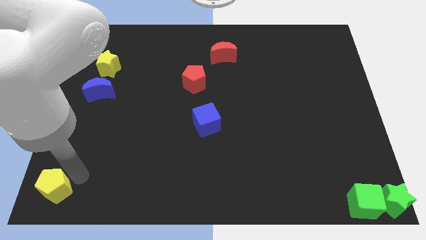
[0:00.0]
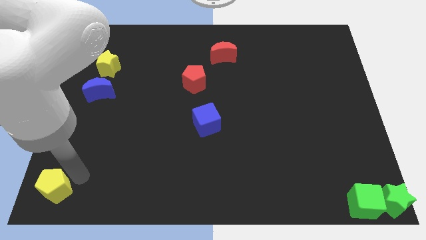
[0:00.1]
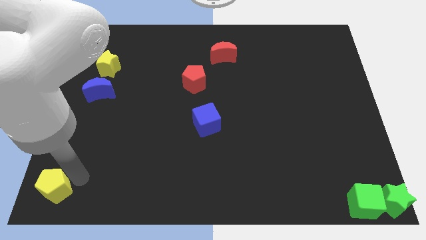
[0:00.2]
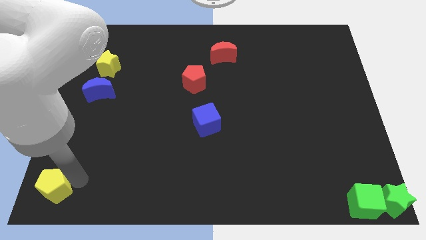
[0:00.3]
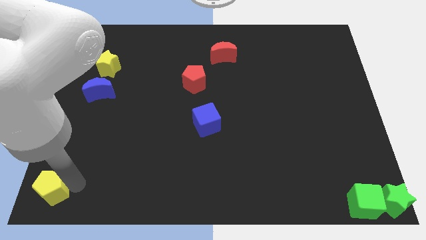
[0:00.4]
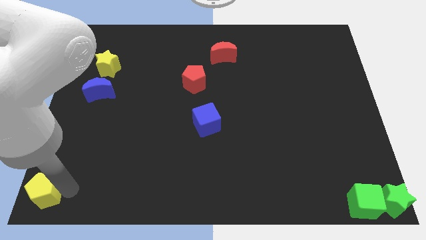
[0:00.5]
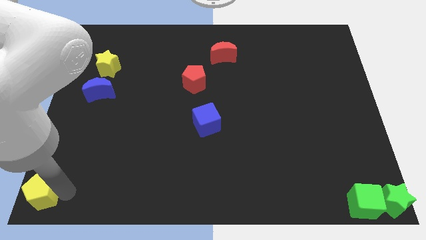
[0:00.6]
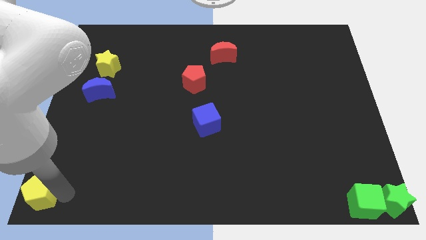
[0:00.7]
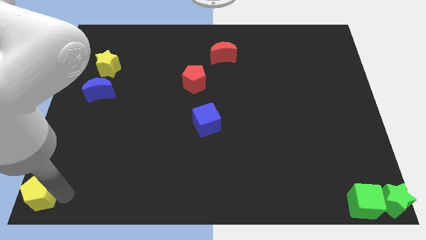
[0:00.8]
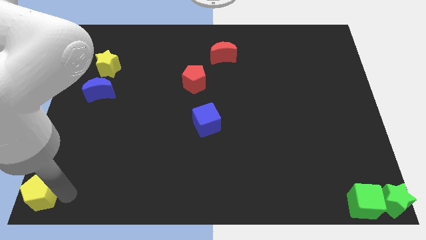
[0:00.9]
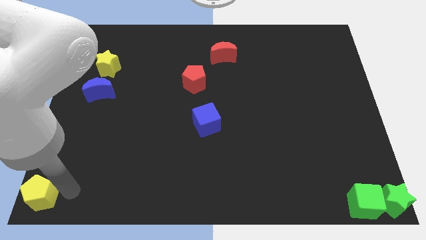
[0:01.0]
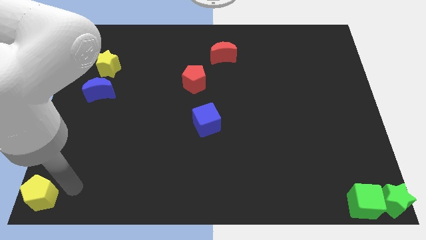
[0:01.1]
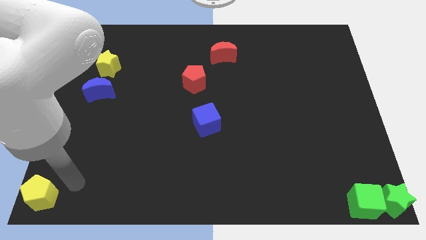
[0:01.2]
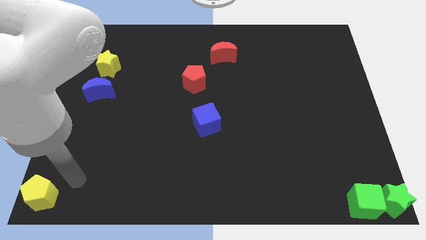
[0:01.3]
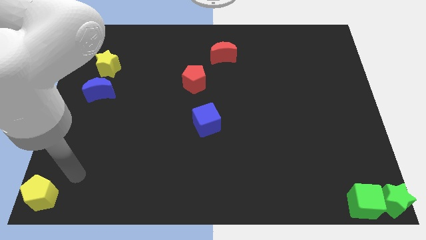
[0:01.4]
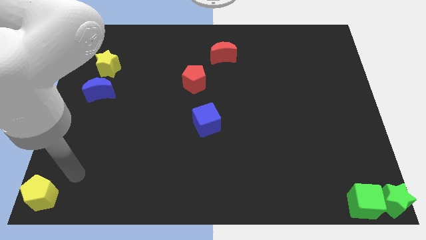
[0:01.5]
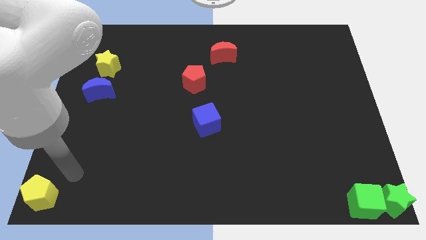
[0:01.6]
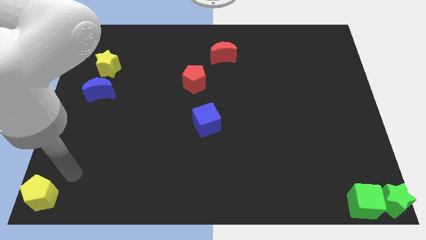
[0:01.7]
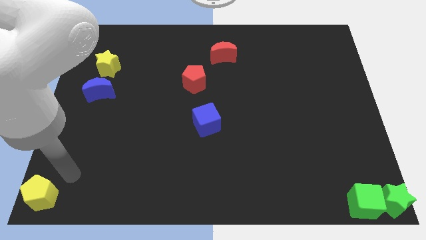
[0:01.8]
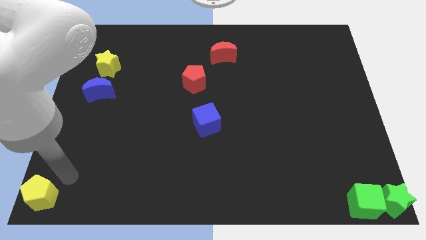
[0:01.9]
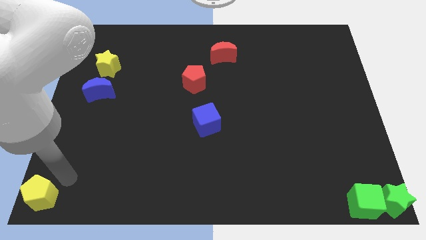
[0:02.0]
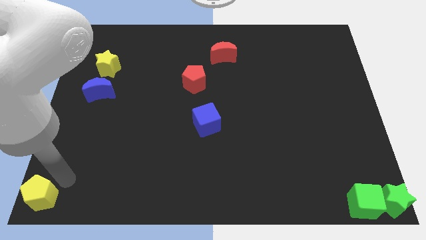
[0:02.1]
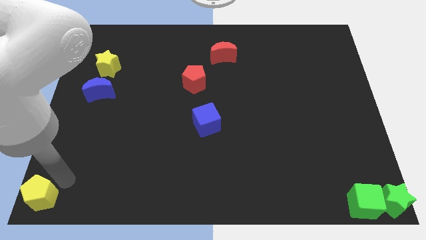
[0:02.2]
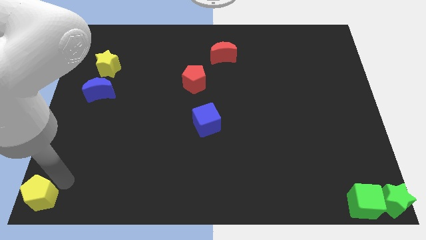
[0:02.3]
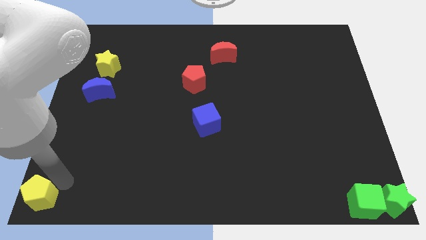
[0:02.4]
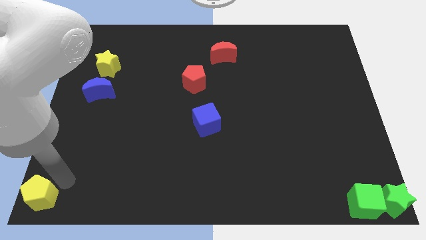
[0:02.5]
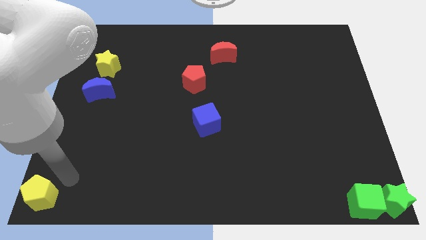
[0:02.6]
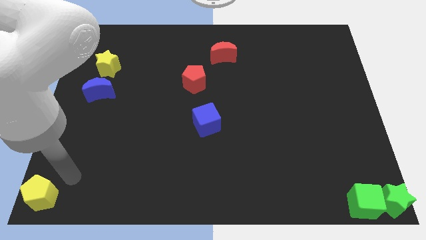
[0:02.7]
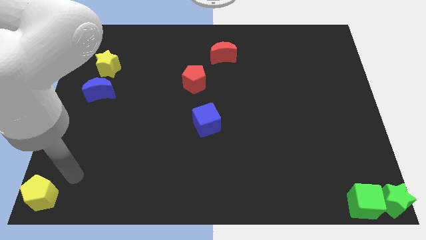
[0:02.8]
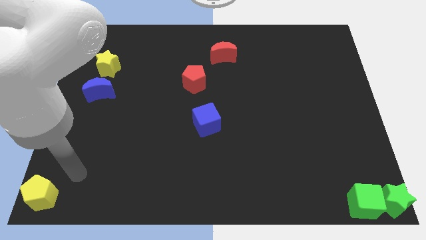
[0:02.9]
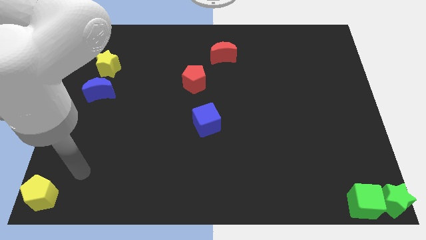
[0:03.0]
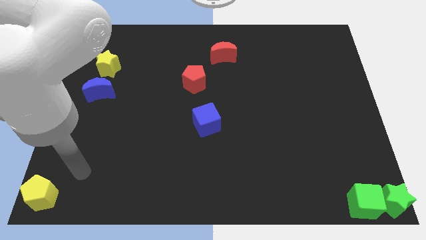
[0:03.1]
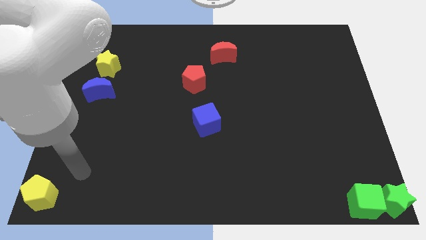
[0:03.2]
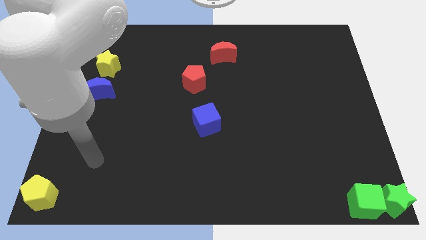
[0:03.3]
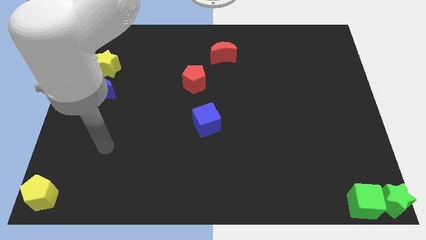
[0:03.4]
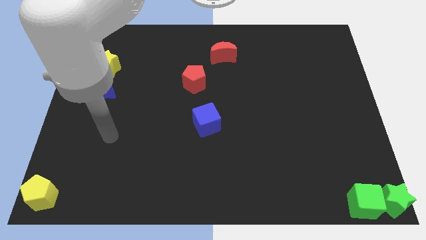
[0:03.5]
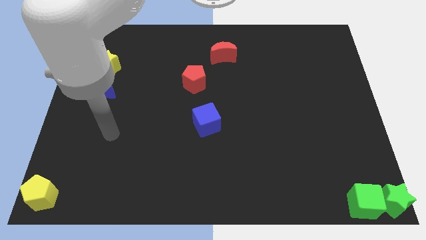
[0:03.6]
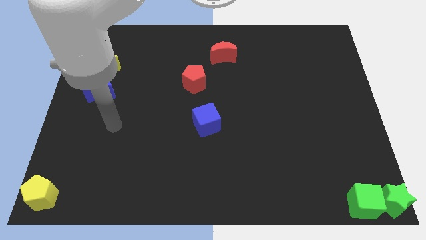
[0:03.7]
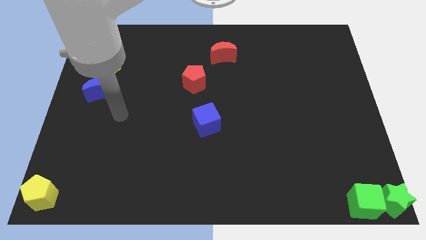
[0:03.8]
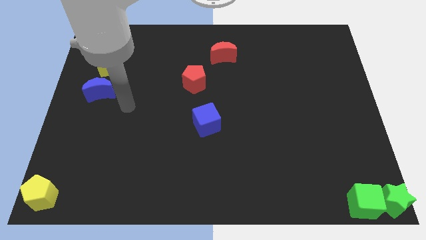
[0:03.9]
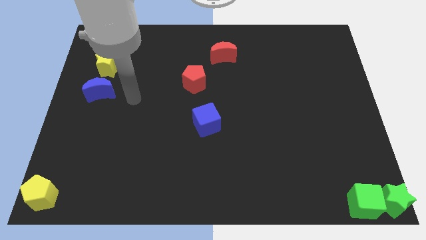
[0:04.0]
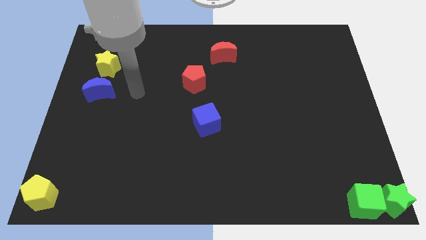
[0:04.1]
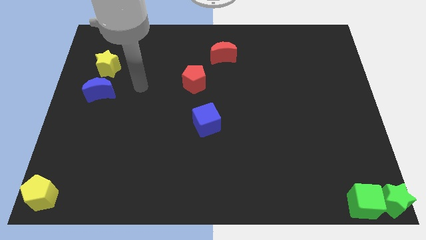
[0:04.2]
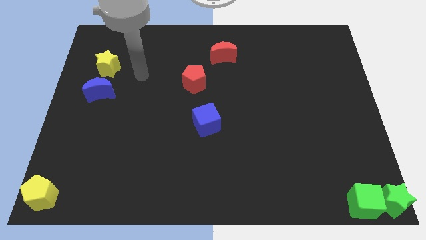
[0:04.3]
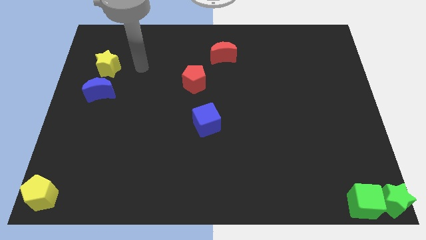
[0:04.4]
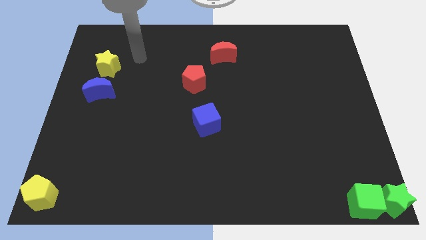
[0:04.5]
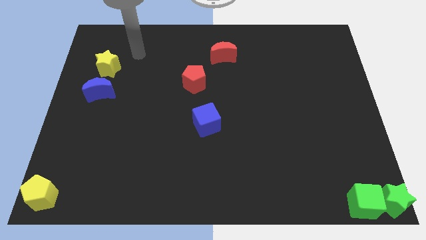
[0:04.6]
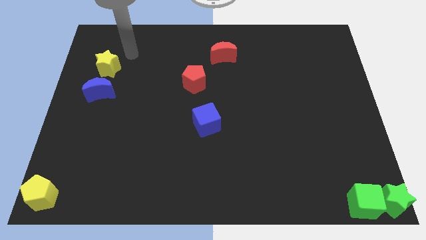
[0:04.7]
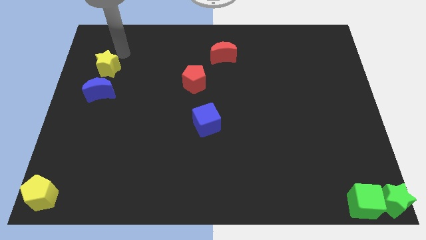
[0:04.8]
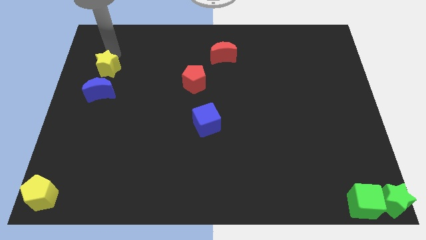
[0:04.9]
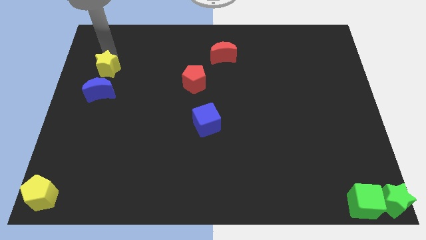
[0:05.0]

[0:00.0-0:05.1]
move the arm to the top of the yellow star

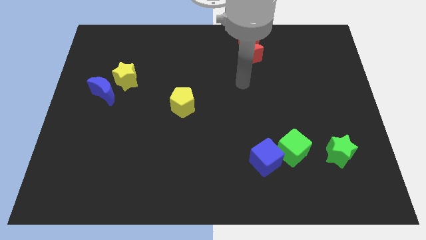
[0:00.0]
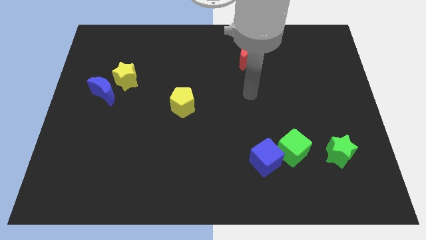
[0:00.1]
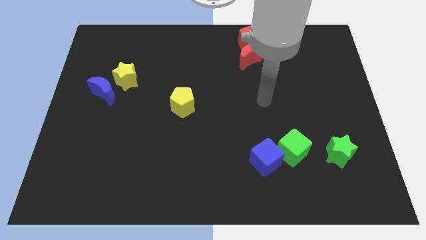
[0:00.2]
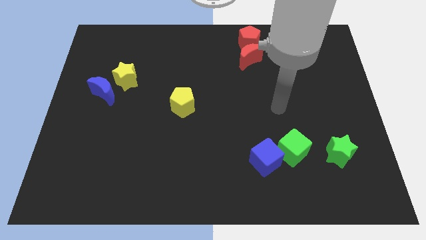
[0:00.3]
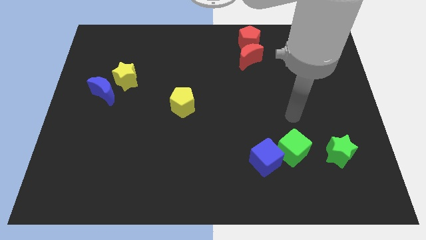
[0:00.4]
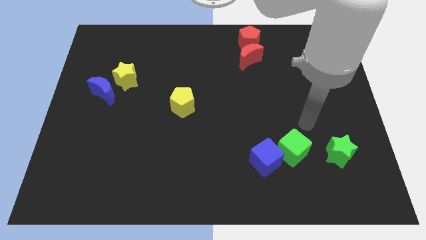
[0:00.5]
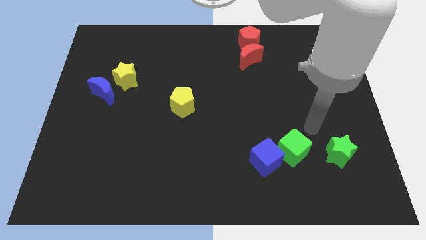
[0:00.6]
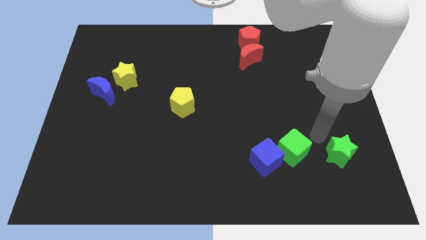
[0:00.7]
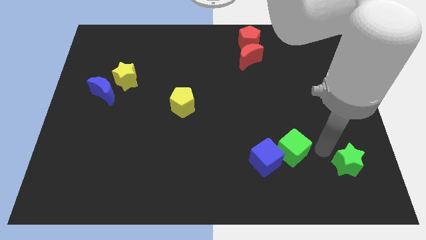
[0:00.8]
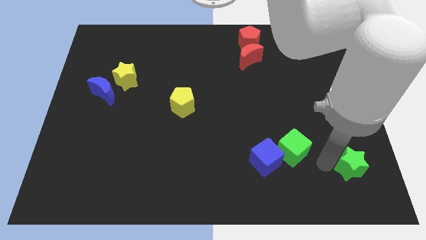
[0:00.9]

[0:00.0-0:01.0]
hit the green star

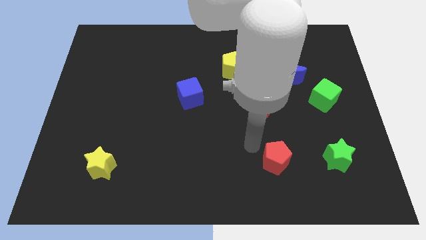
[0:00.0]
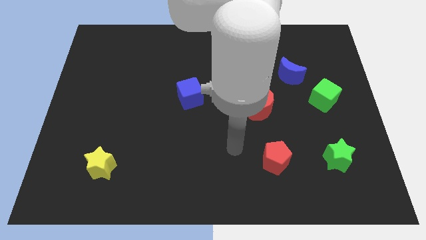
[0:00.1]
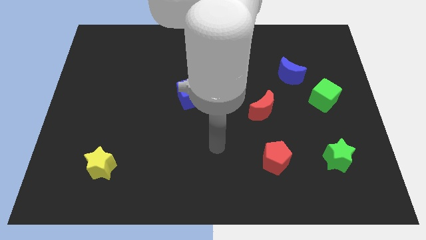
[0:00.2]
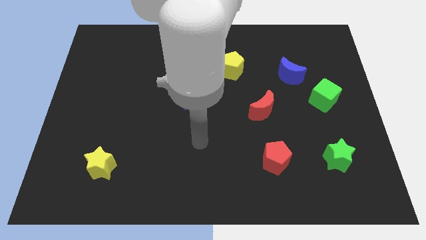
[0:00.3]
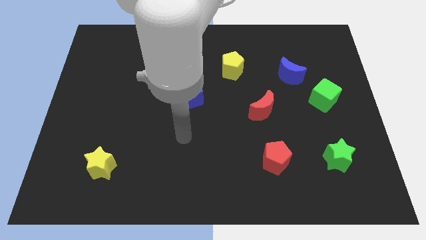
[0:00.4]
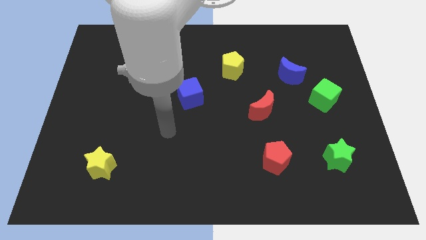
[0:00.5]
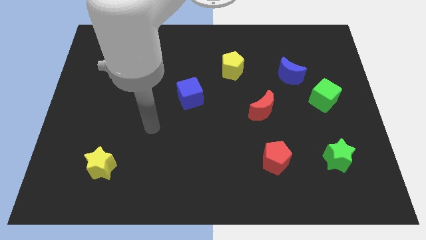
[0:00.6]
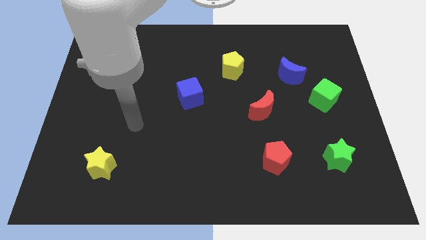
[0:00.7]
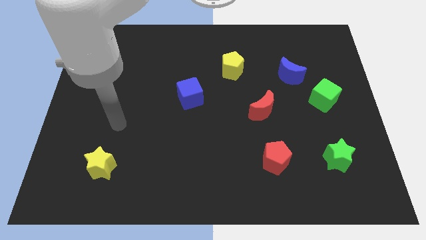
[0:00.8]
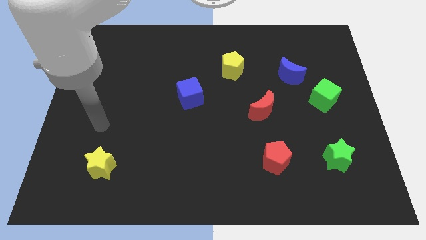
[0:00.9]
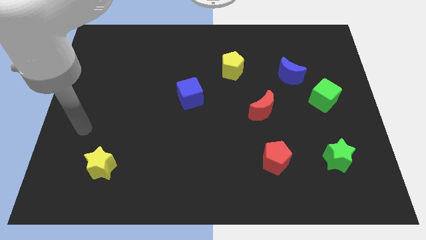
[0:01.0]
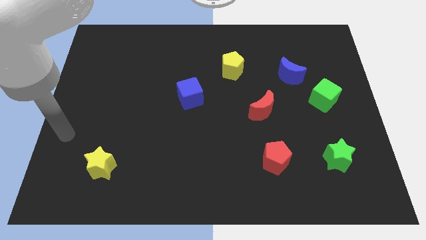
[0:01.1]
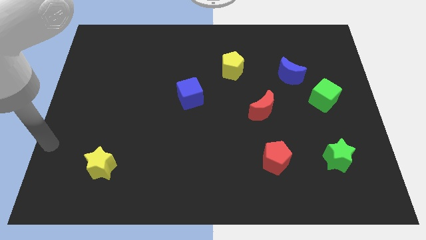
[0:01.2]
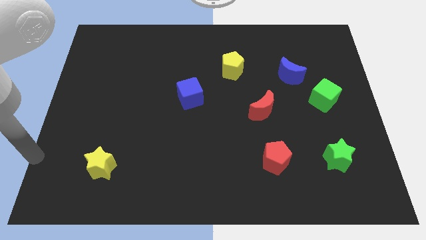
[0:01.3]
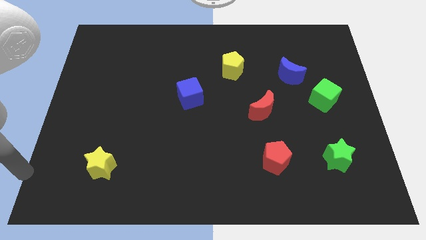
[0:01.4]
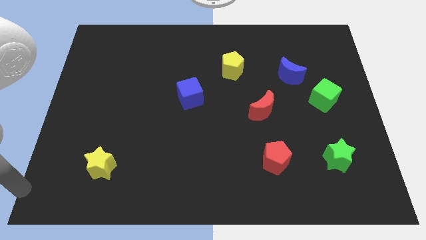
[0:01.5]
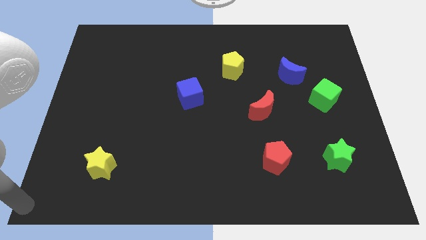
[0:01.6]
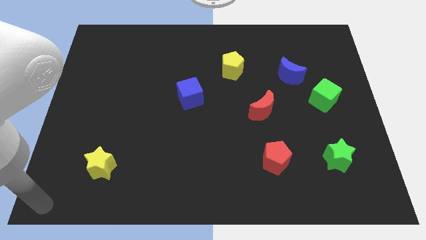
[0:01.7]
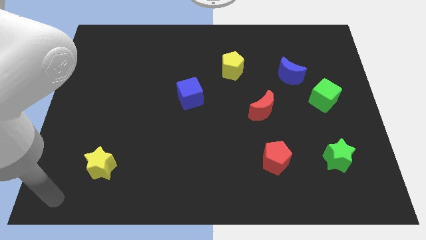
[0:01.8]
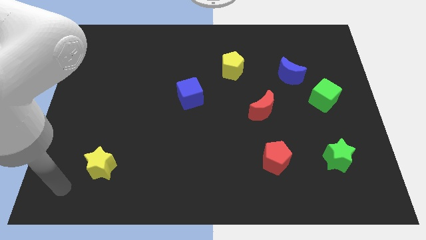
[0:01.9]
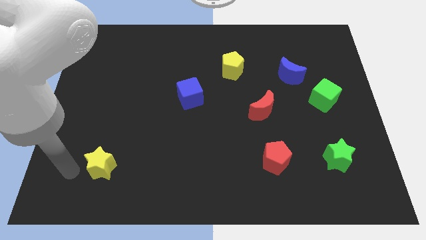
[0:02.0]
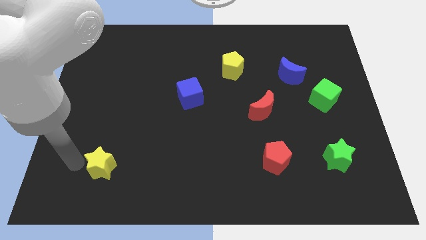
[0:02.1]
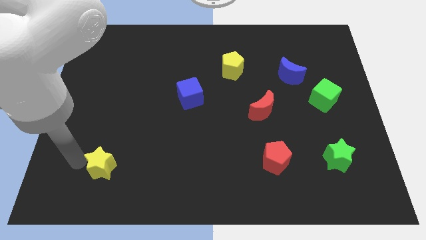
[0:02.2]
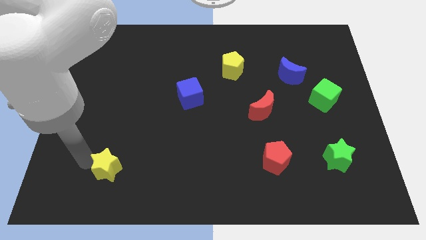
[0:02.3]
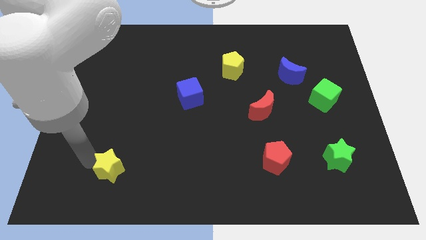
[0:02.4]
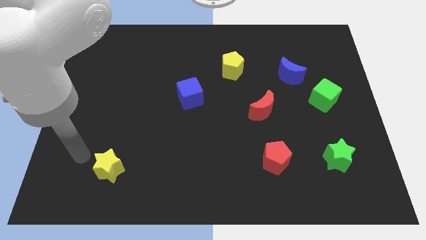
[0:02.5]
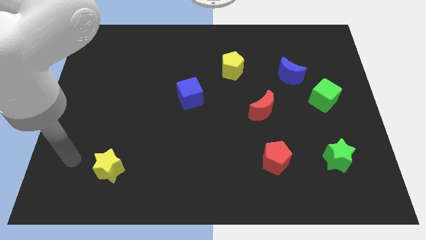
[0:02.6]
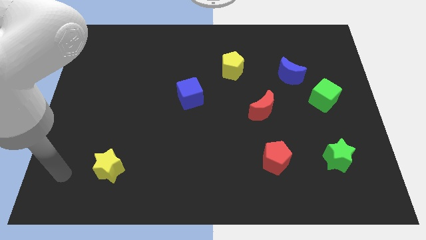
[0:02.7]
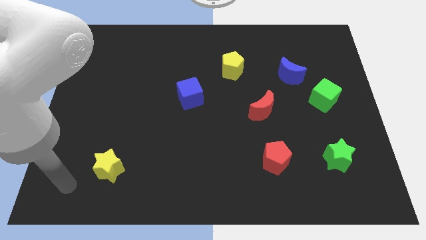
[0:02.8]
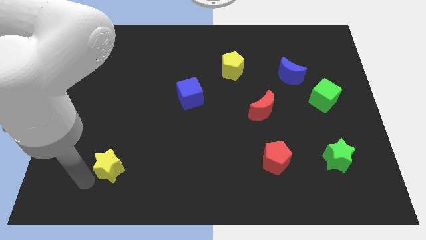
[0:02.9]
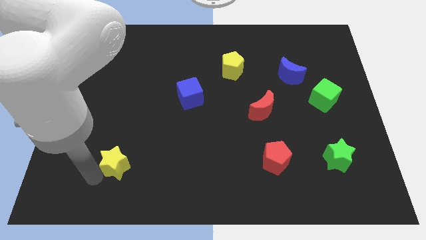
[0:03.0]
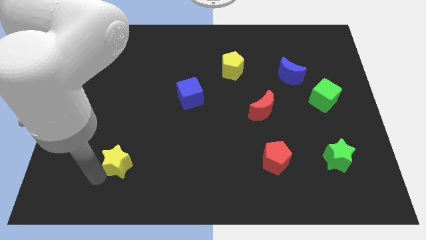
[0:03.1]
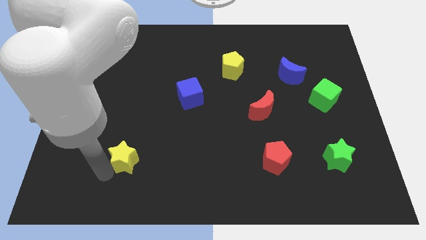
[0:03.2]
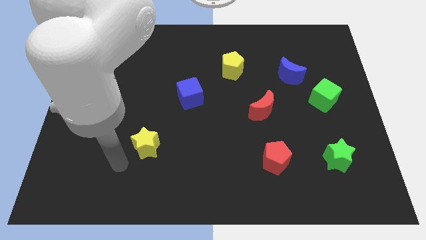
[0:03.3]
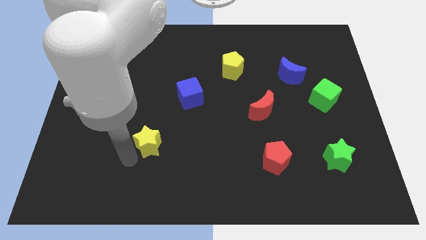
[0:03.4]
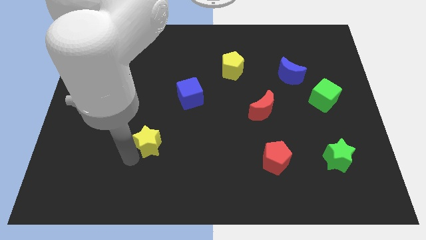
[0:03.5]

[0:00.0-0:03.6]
push the yellow star towards the blue cube
